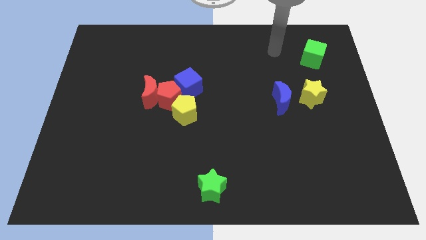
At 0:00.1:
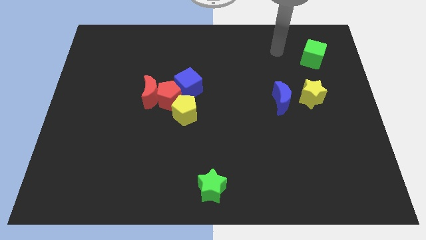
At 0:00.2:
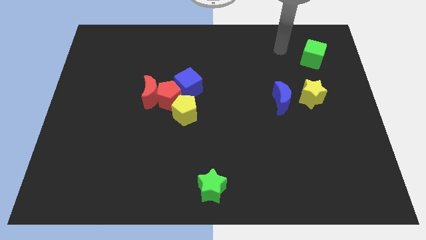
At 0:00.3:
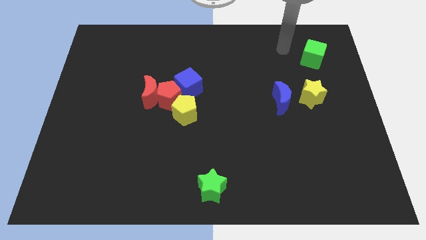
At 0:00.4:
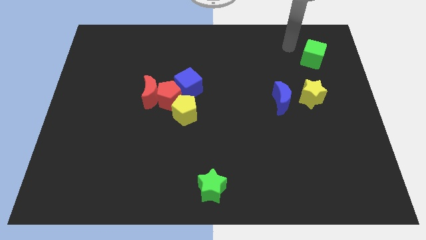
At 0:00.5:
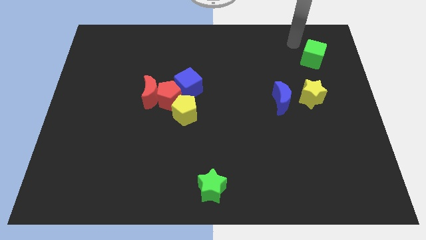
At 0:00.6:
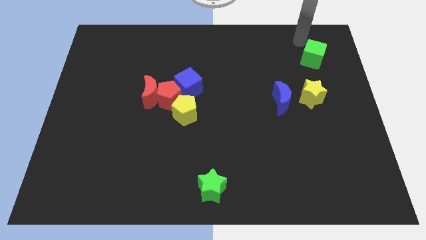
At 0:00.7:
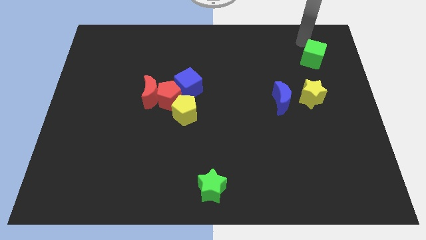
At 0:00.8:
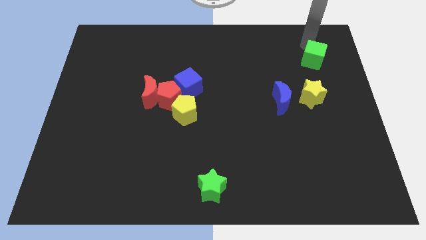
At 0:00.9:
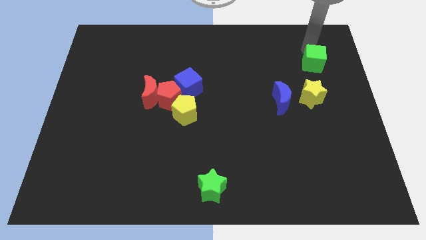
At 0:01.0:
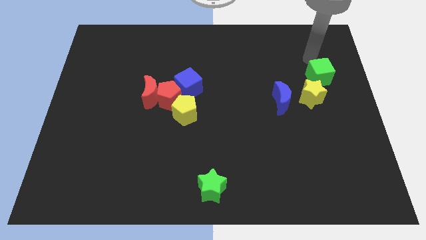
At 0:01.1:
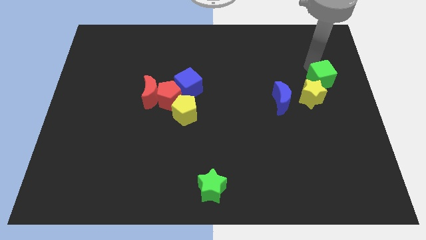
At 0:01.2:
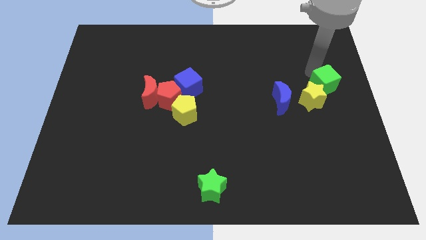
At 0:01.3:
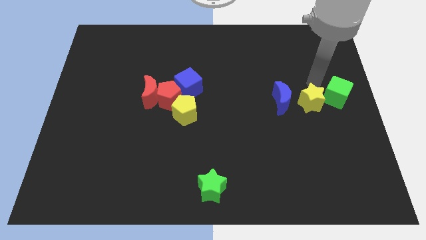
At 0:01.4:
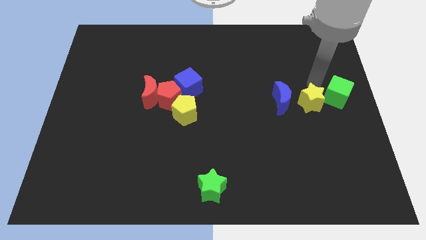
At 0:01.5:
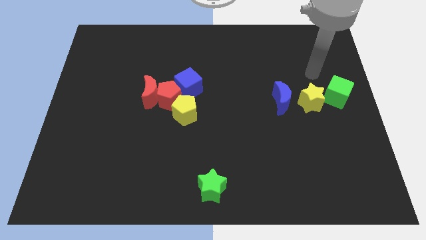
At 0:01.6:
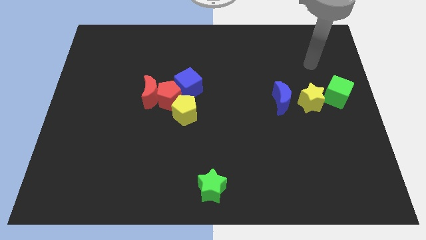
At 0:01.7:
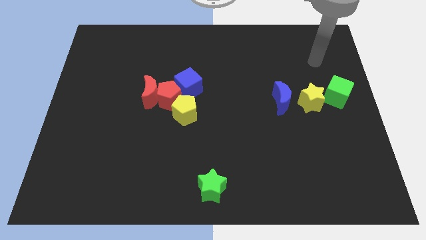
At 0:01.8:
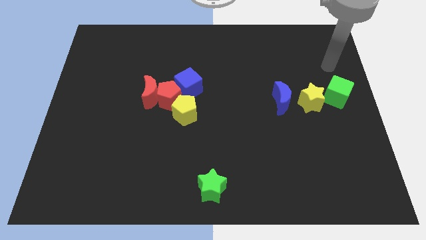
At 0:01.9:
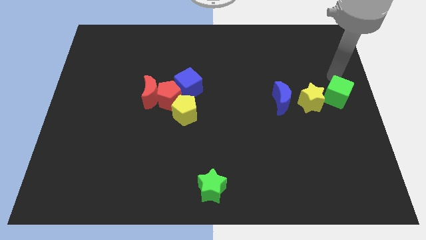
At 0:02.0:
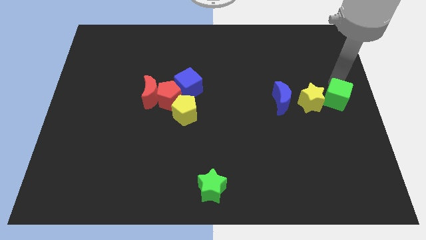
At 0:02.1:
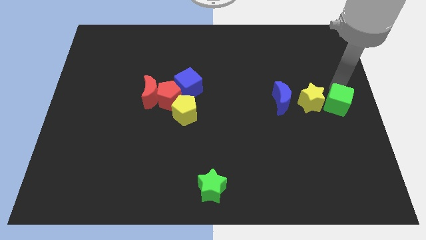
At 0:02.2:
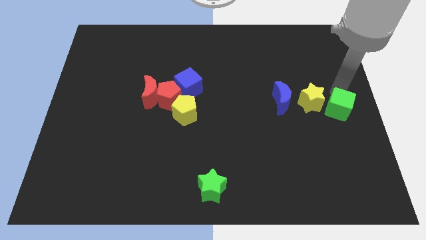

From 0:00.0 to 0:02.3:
push the green cube to the right of yellow star

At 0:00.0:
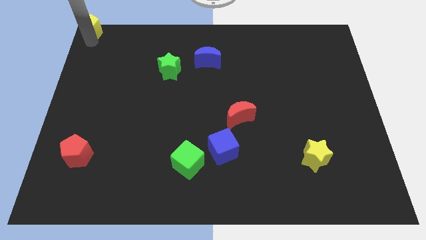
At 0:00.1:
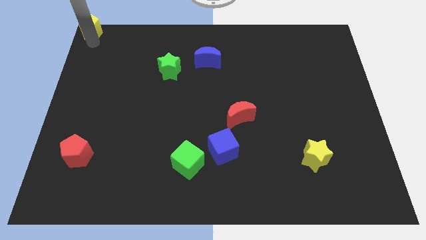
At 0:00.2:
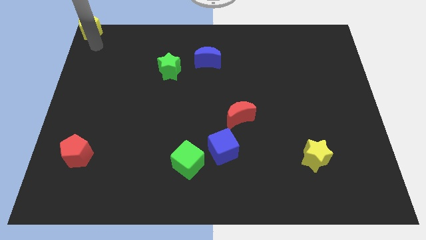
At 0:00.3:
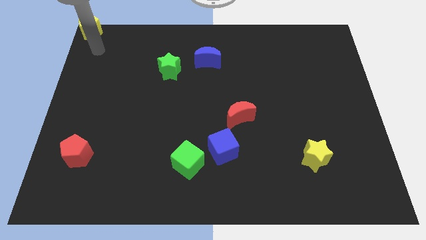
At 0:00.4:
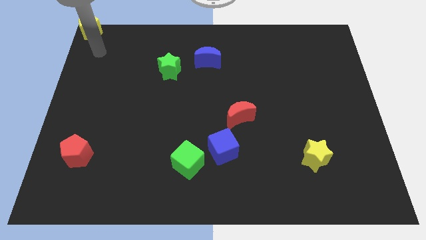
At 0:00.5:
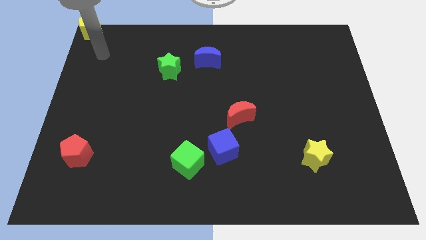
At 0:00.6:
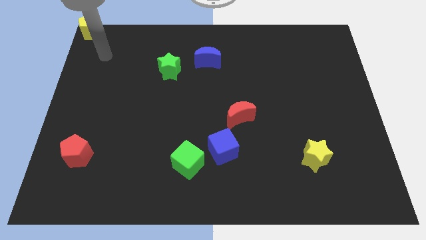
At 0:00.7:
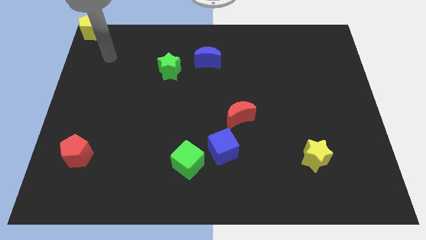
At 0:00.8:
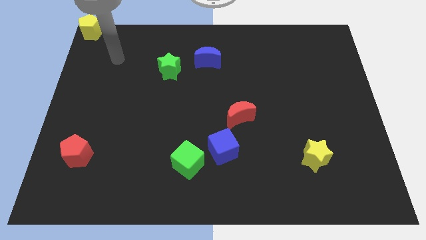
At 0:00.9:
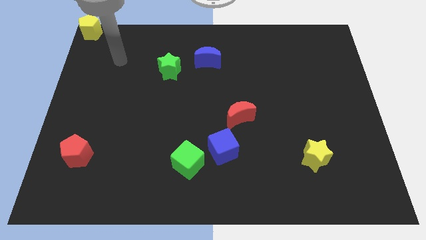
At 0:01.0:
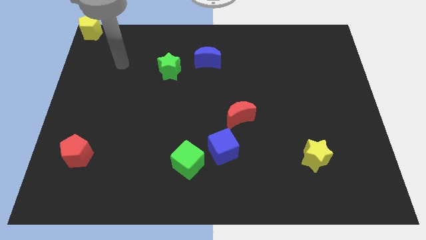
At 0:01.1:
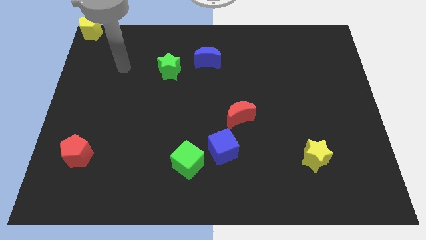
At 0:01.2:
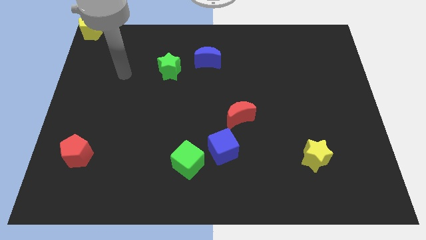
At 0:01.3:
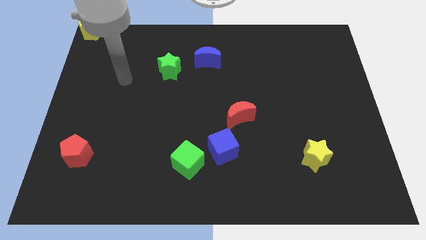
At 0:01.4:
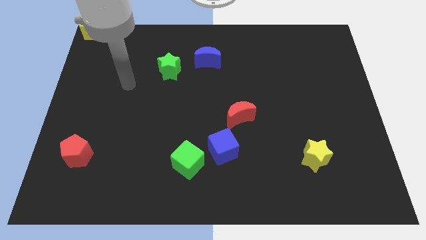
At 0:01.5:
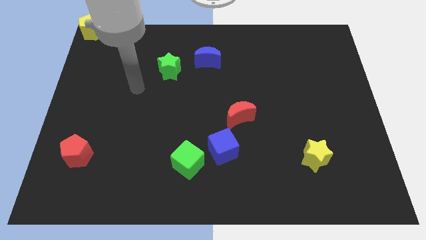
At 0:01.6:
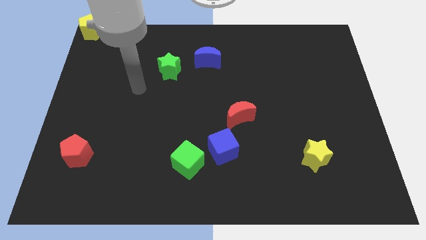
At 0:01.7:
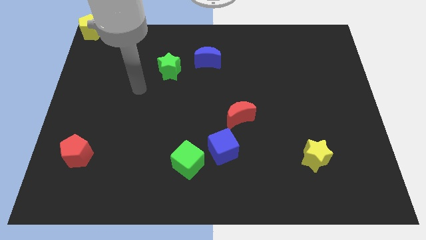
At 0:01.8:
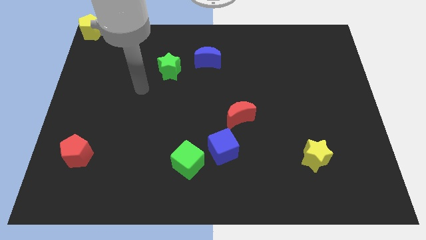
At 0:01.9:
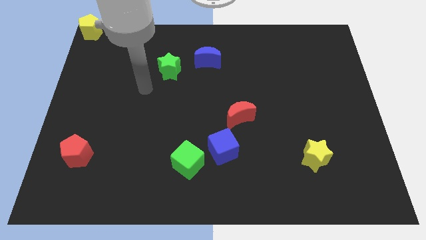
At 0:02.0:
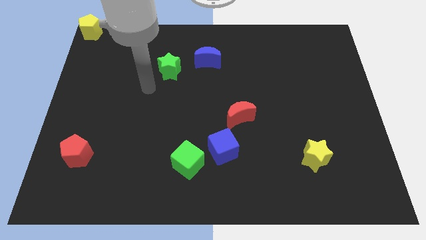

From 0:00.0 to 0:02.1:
move your arm towards green star

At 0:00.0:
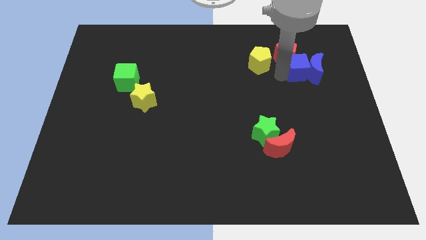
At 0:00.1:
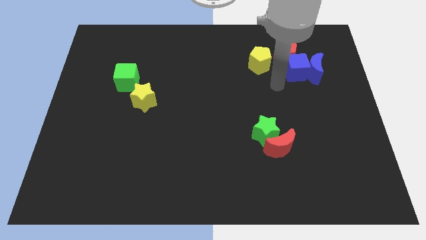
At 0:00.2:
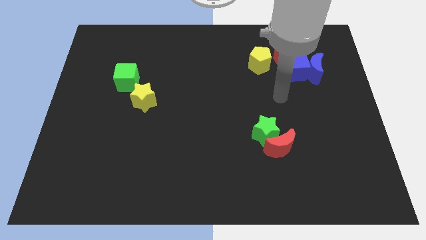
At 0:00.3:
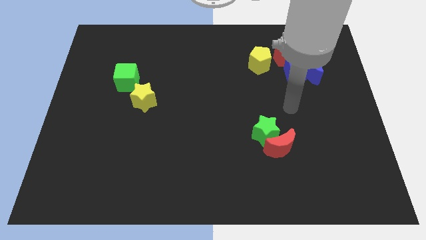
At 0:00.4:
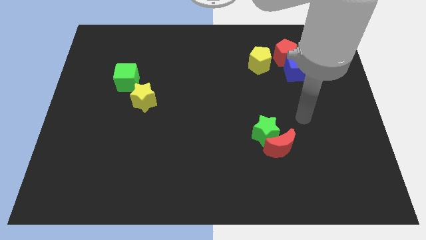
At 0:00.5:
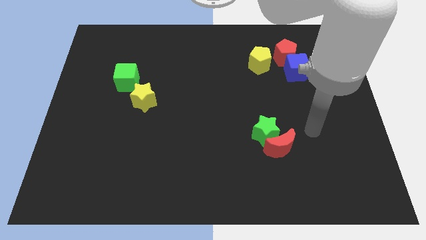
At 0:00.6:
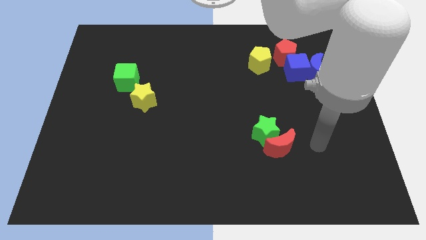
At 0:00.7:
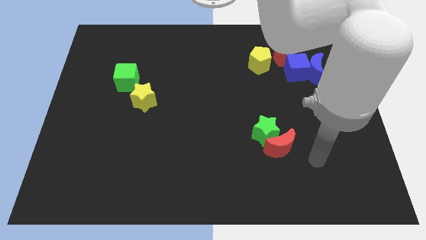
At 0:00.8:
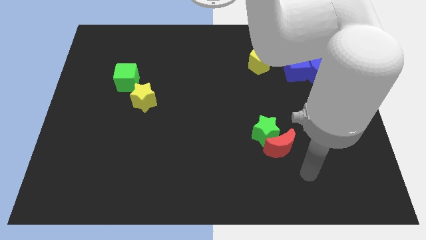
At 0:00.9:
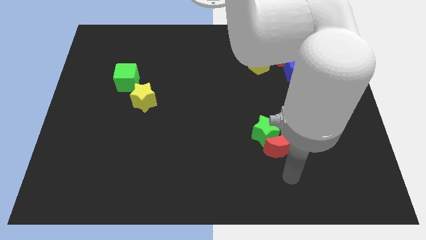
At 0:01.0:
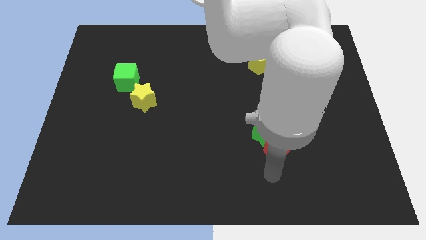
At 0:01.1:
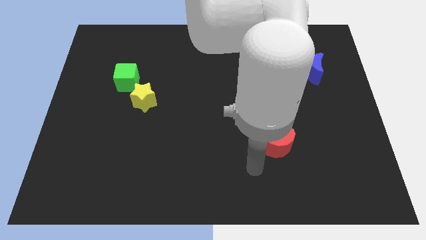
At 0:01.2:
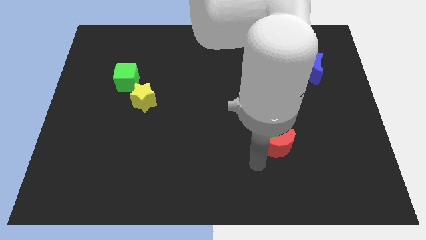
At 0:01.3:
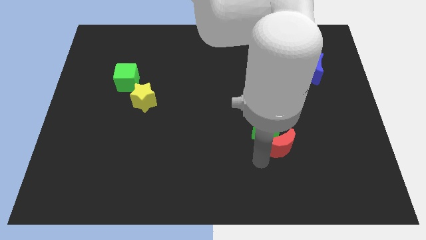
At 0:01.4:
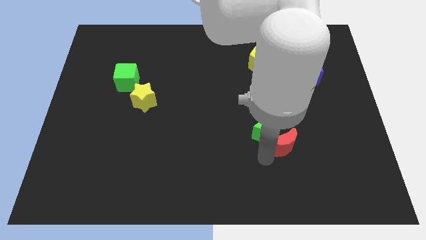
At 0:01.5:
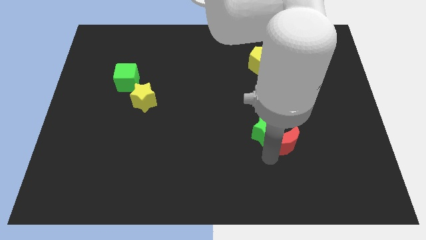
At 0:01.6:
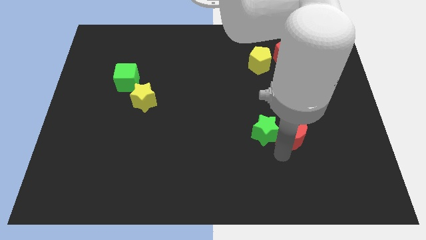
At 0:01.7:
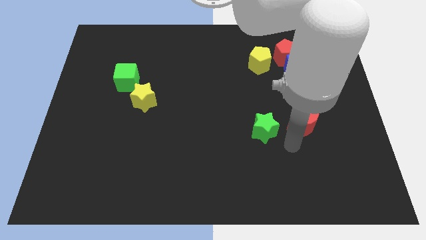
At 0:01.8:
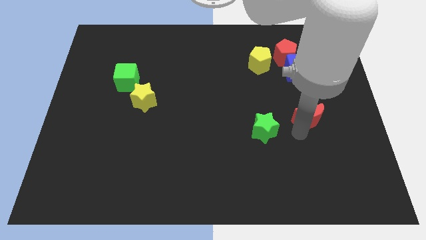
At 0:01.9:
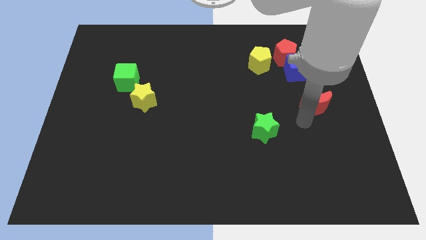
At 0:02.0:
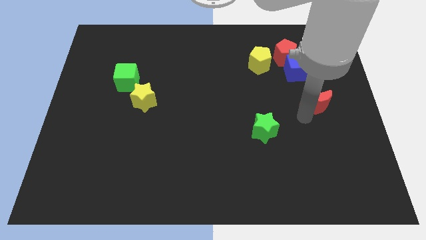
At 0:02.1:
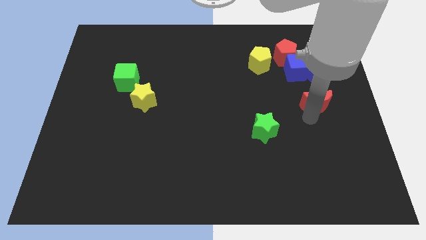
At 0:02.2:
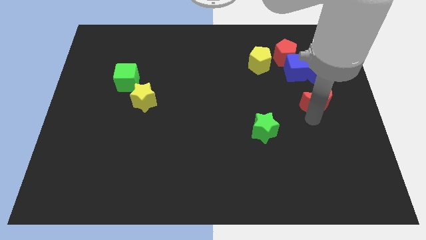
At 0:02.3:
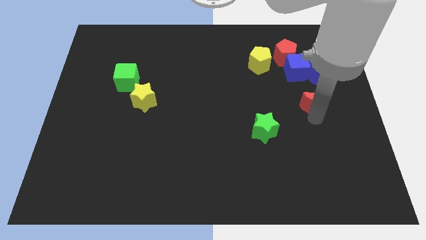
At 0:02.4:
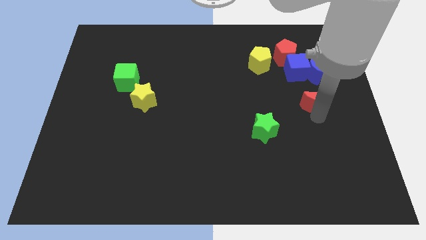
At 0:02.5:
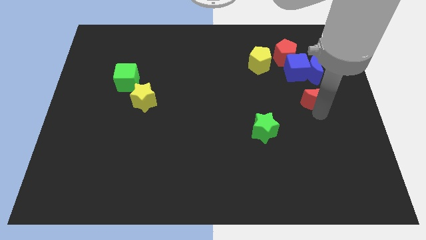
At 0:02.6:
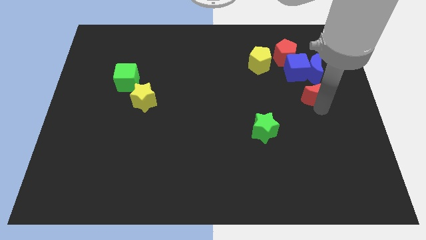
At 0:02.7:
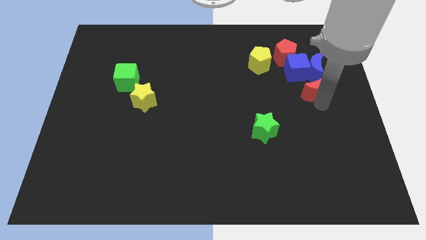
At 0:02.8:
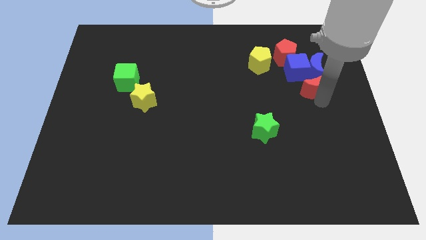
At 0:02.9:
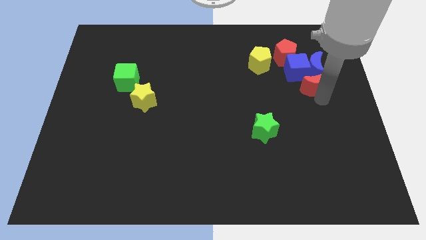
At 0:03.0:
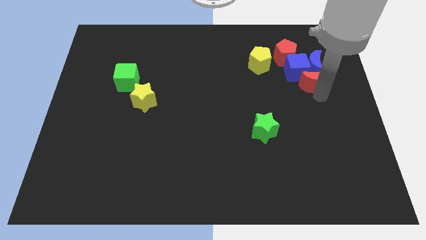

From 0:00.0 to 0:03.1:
place the red crescent under the blue blocks

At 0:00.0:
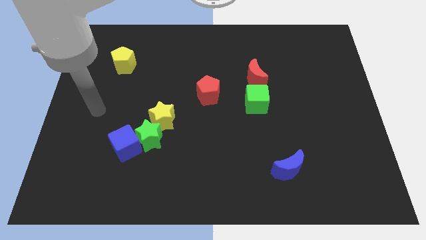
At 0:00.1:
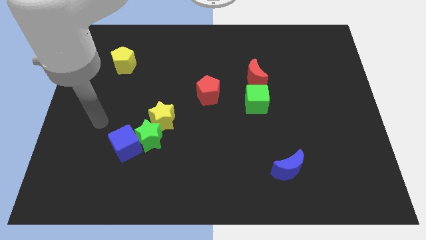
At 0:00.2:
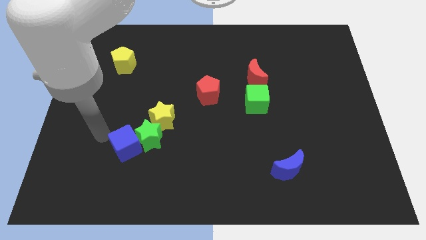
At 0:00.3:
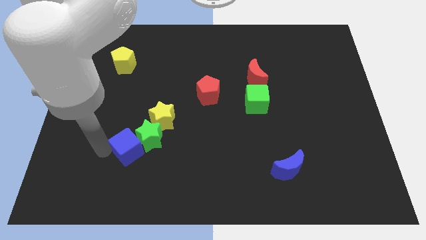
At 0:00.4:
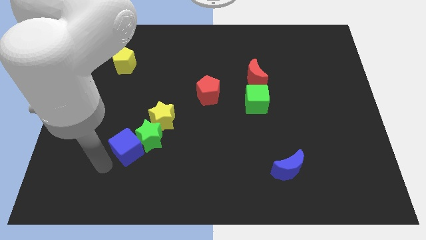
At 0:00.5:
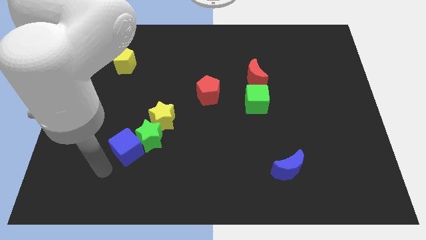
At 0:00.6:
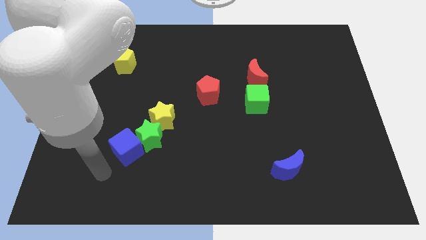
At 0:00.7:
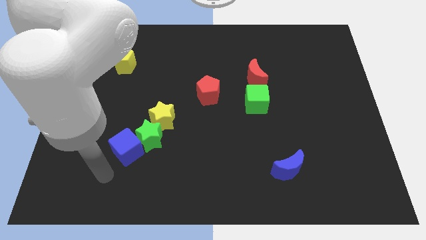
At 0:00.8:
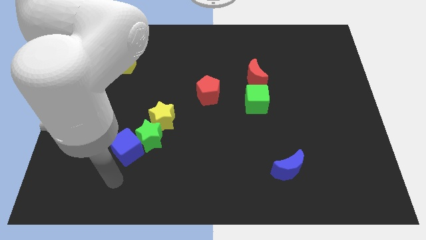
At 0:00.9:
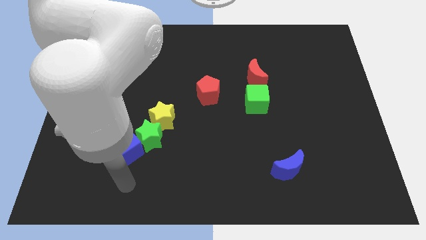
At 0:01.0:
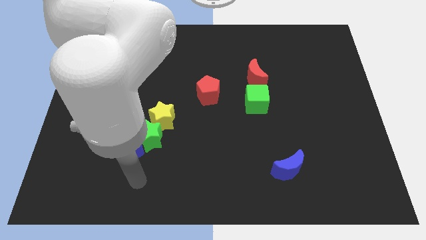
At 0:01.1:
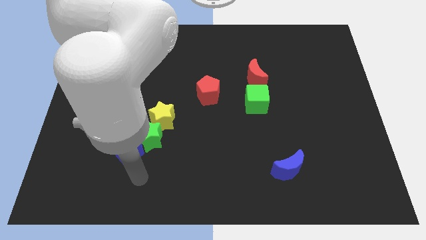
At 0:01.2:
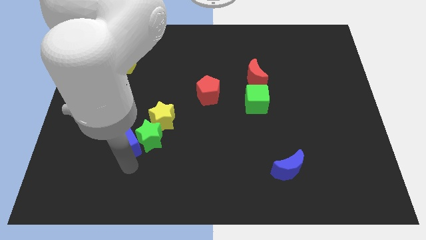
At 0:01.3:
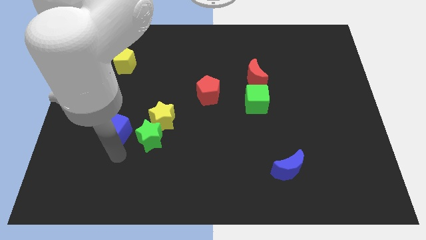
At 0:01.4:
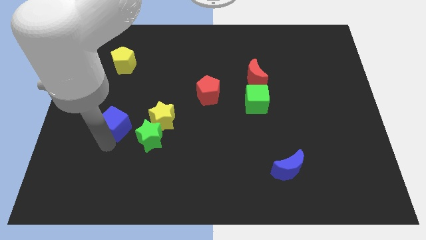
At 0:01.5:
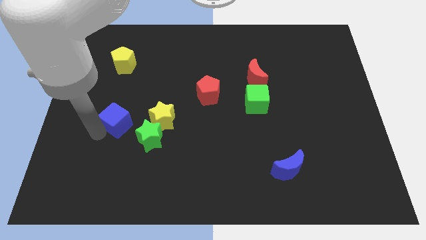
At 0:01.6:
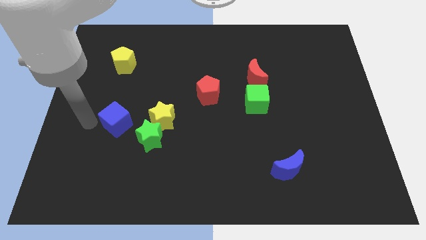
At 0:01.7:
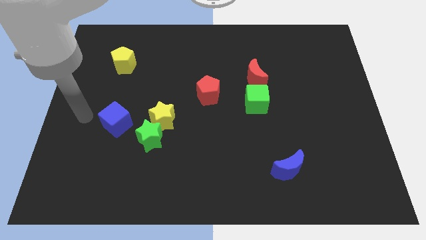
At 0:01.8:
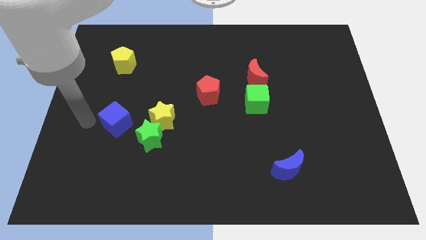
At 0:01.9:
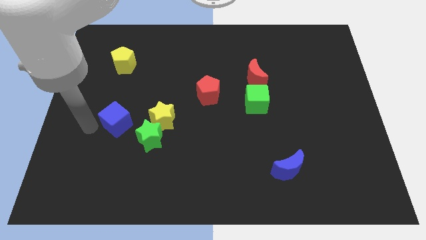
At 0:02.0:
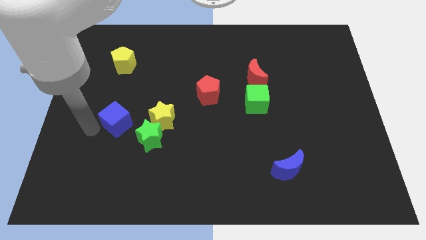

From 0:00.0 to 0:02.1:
move the blue cube to the top of the board
